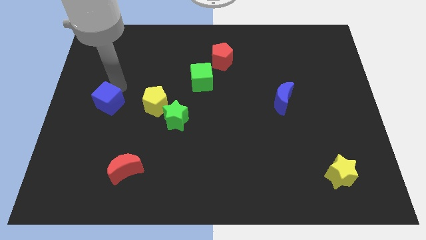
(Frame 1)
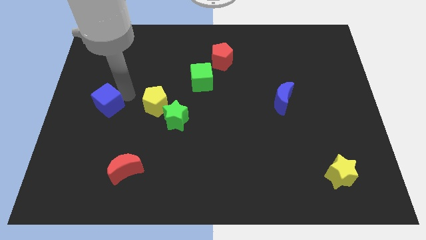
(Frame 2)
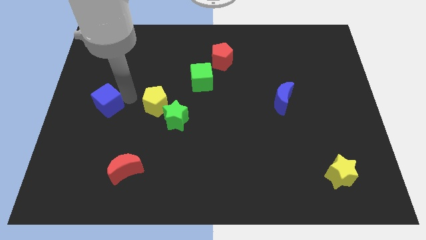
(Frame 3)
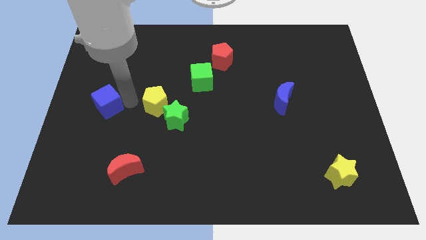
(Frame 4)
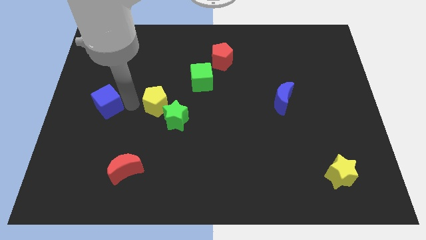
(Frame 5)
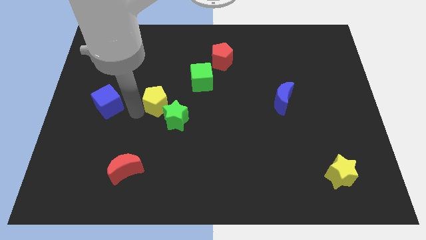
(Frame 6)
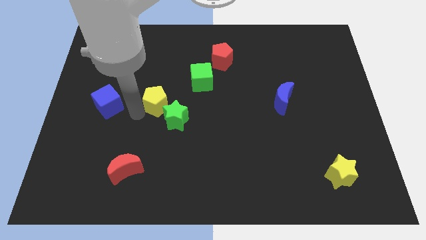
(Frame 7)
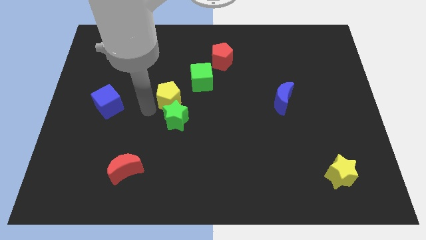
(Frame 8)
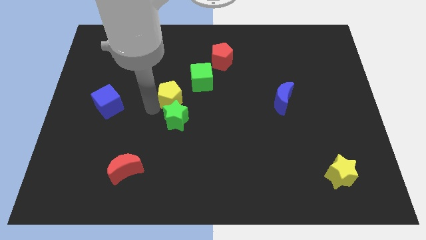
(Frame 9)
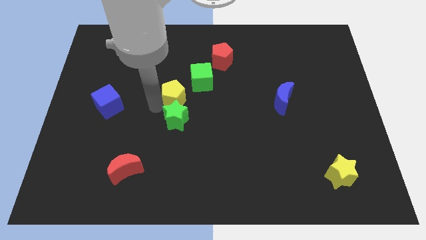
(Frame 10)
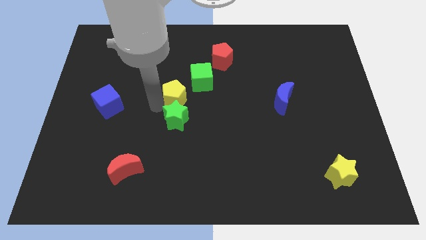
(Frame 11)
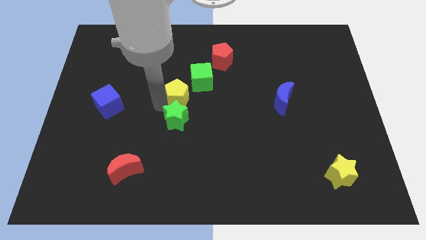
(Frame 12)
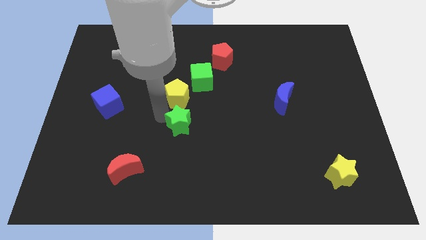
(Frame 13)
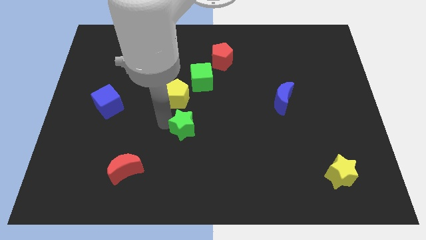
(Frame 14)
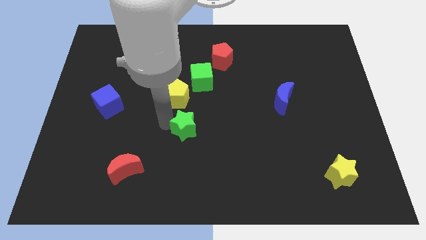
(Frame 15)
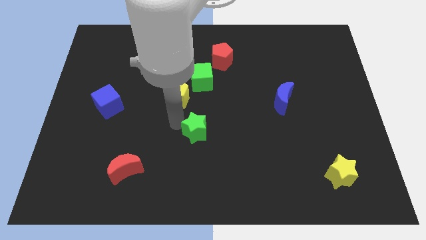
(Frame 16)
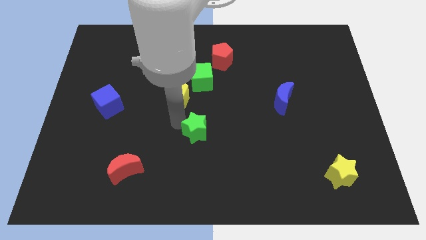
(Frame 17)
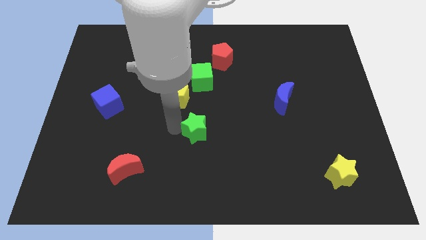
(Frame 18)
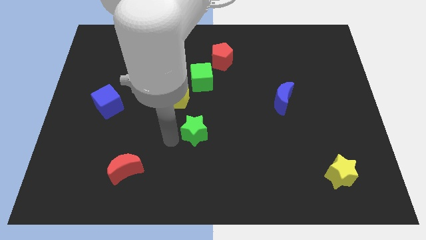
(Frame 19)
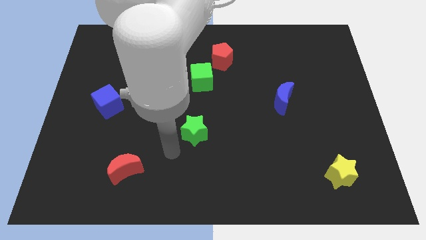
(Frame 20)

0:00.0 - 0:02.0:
place the green star diagonal to the yellow pentagon

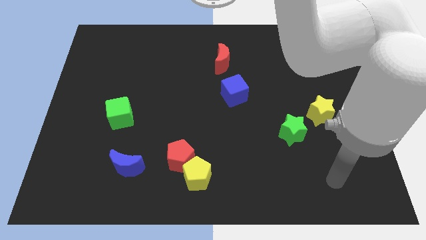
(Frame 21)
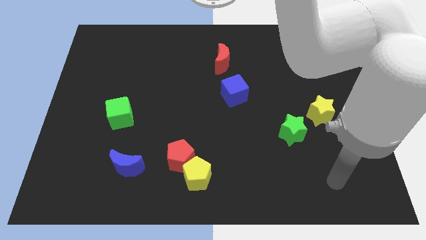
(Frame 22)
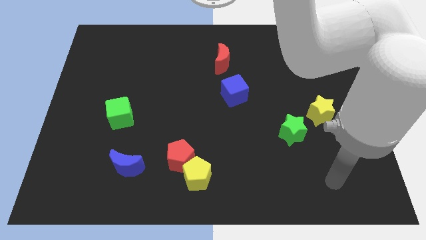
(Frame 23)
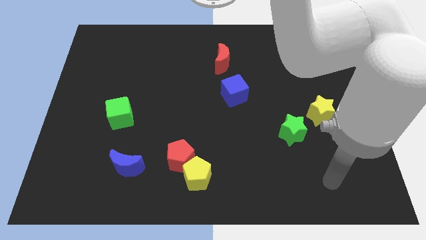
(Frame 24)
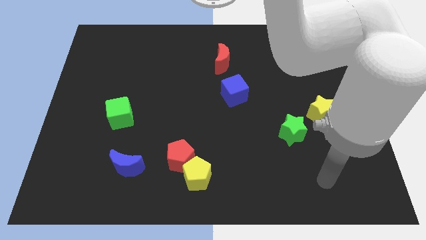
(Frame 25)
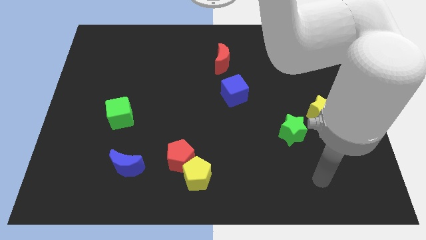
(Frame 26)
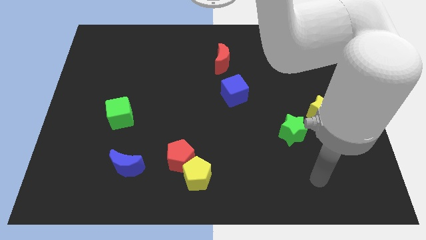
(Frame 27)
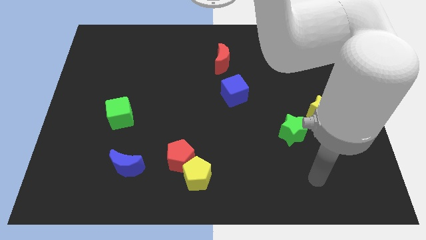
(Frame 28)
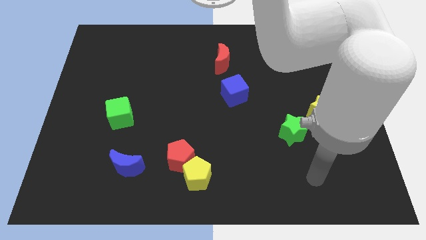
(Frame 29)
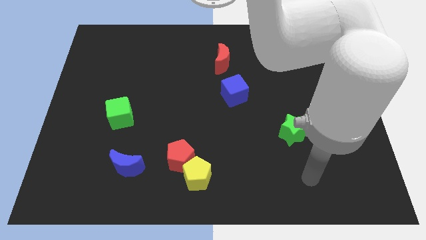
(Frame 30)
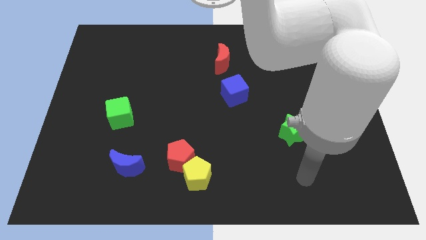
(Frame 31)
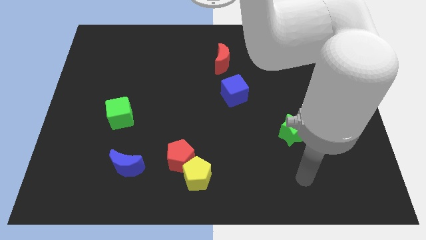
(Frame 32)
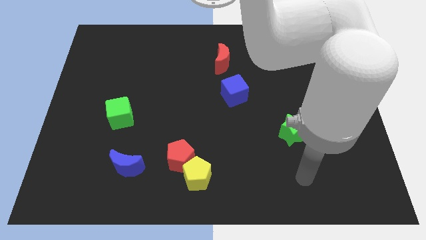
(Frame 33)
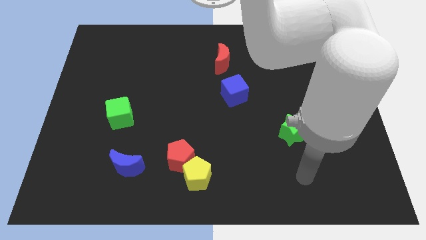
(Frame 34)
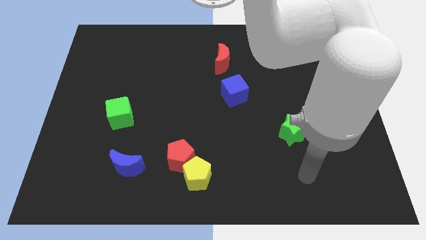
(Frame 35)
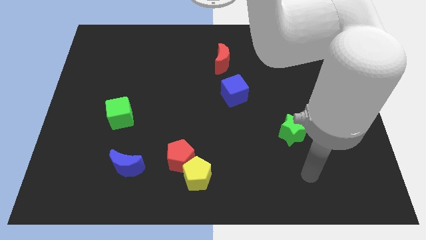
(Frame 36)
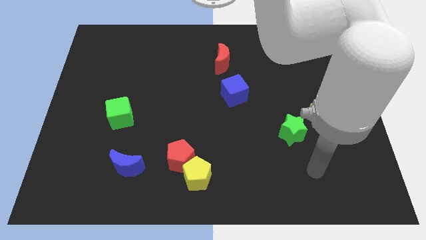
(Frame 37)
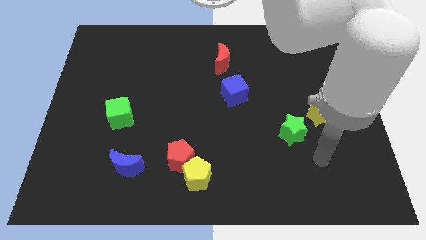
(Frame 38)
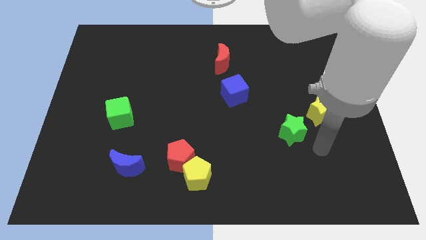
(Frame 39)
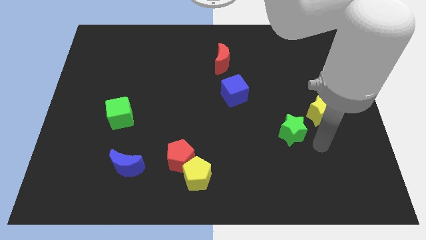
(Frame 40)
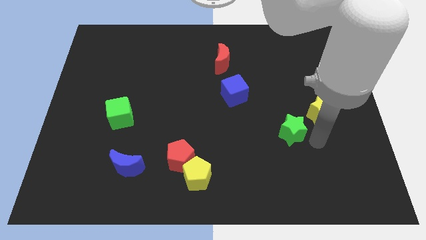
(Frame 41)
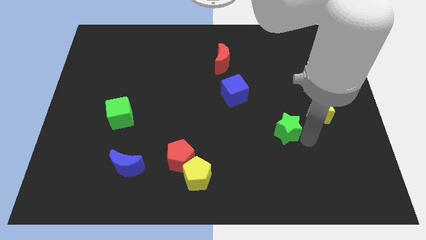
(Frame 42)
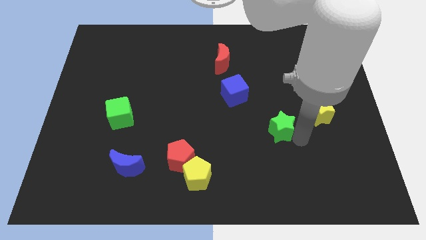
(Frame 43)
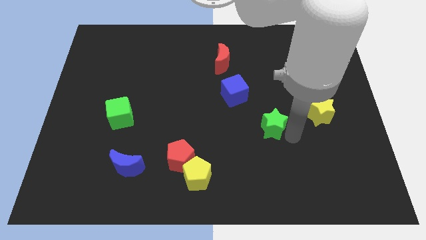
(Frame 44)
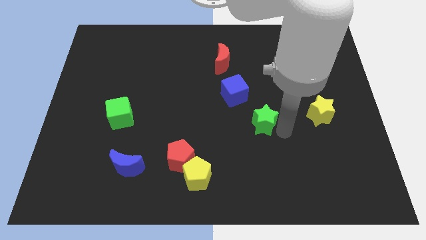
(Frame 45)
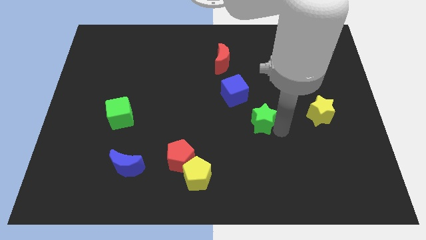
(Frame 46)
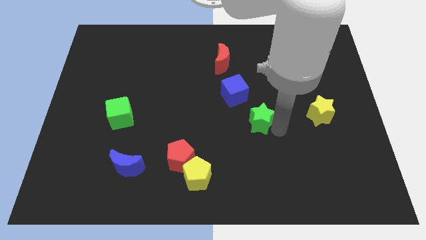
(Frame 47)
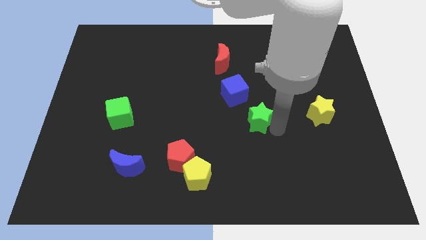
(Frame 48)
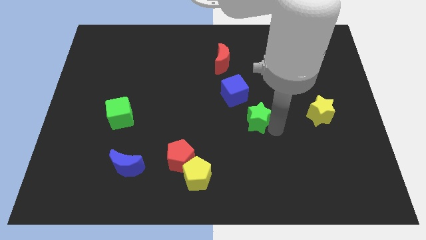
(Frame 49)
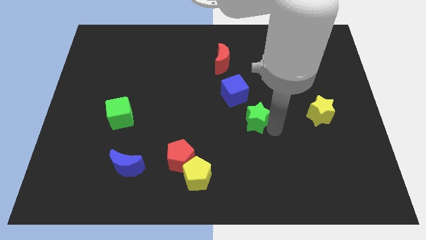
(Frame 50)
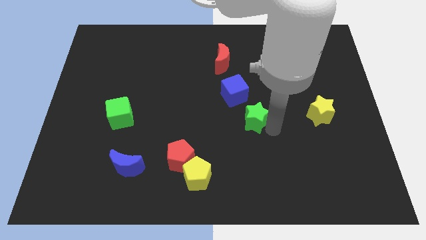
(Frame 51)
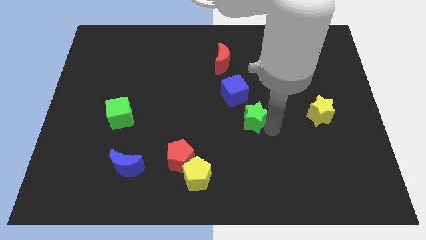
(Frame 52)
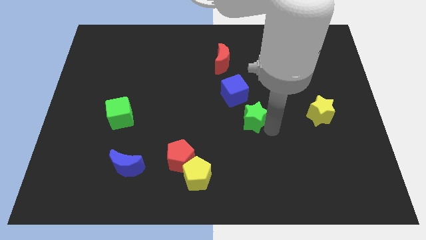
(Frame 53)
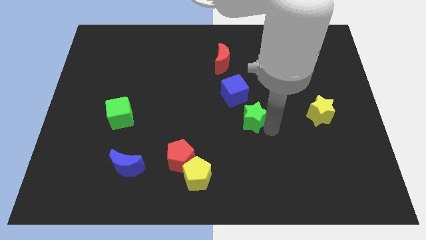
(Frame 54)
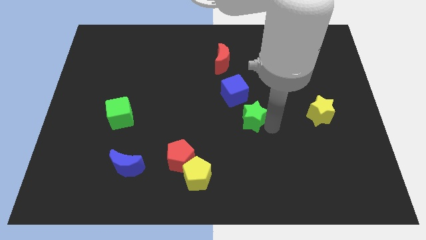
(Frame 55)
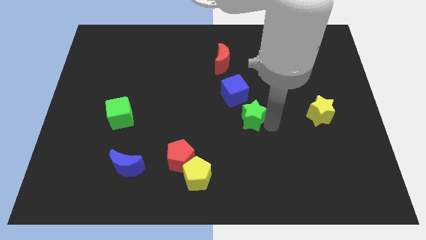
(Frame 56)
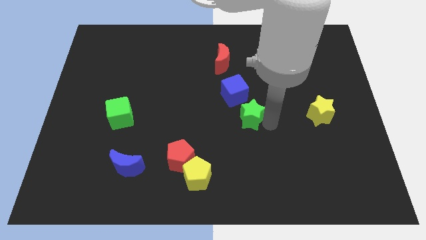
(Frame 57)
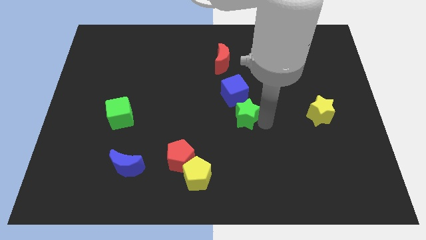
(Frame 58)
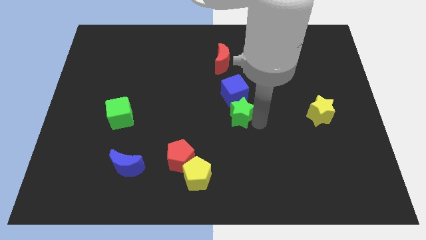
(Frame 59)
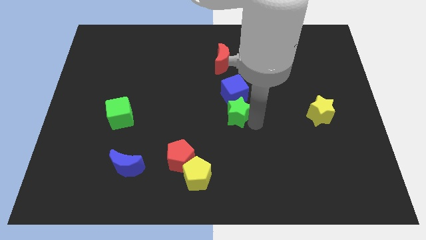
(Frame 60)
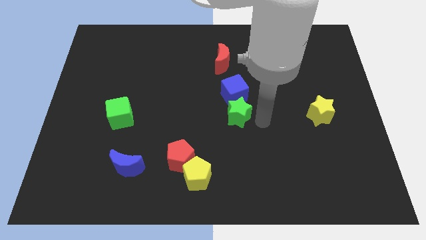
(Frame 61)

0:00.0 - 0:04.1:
move the green star to the bottom of the blue cube

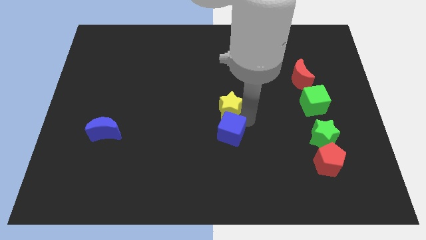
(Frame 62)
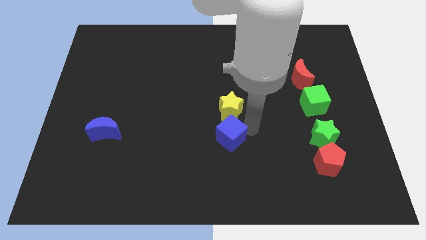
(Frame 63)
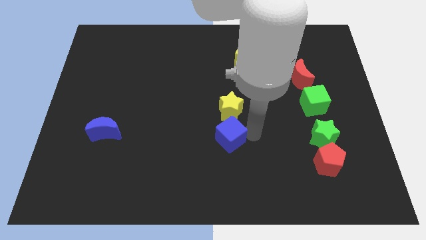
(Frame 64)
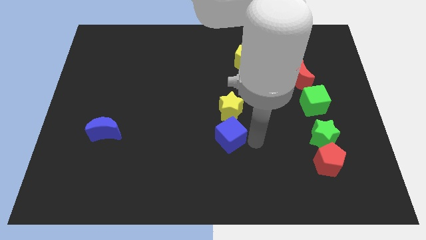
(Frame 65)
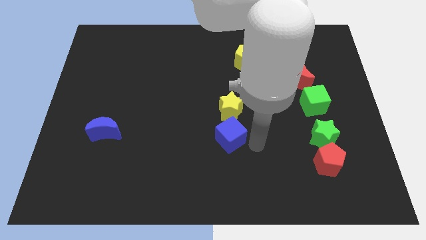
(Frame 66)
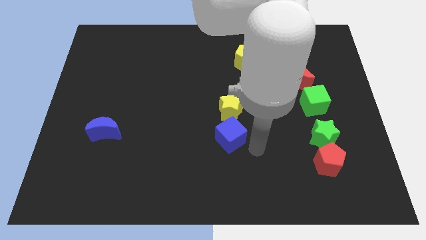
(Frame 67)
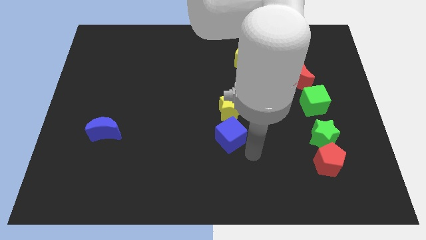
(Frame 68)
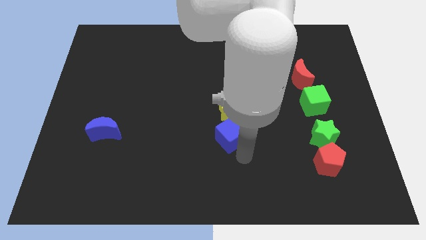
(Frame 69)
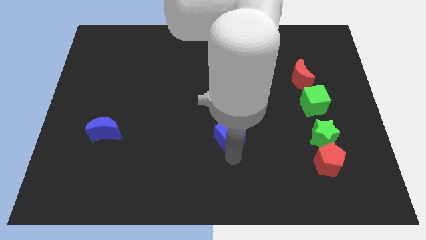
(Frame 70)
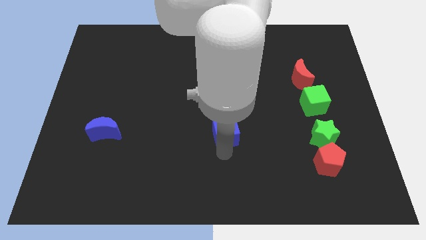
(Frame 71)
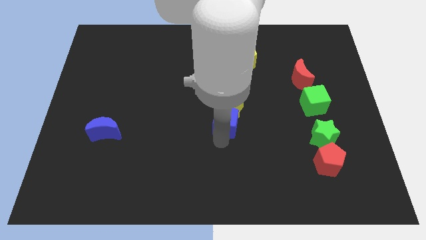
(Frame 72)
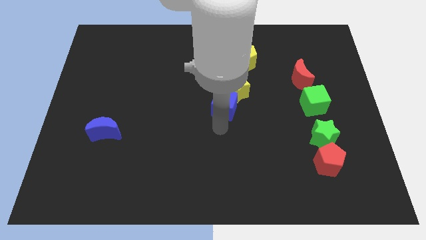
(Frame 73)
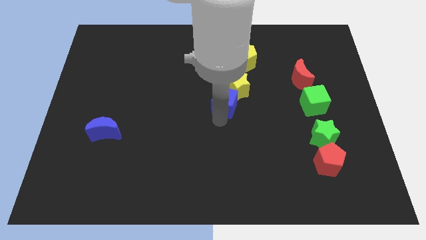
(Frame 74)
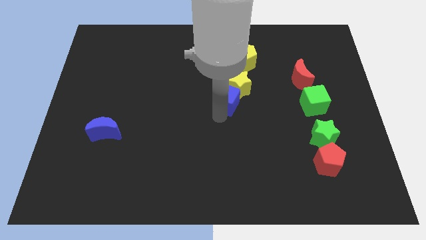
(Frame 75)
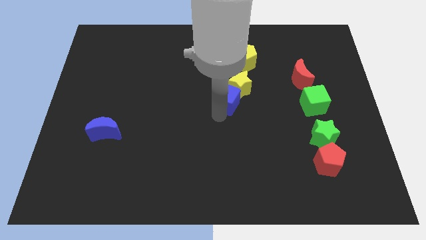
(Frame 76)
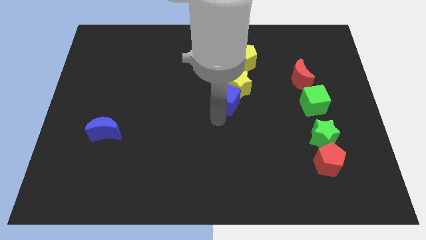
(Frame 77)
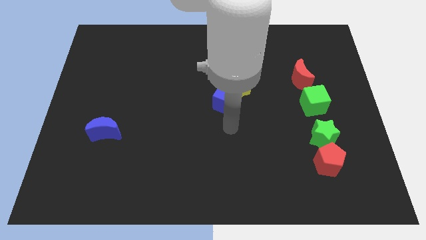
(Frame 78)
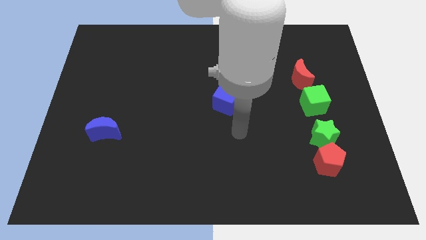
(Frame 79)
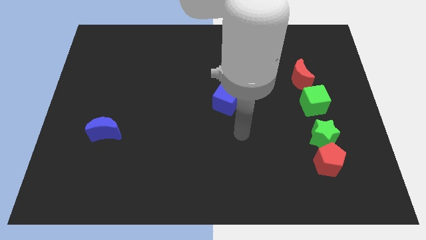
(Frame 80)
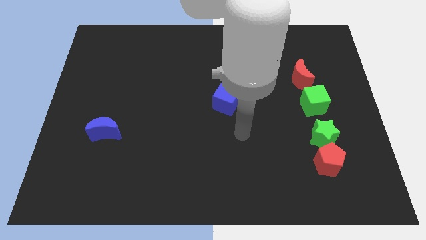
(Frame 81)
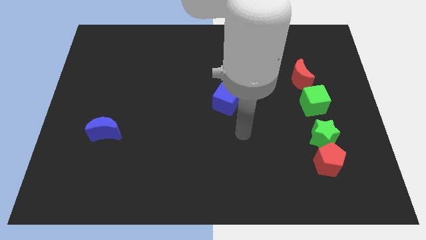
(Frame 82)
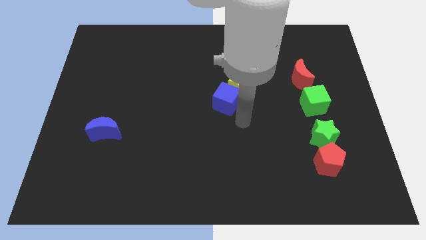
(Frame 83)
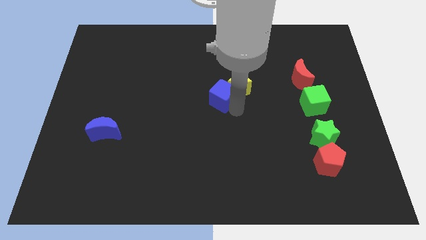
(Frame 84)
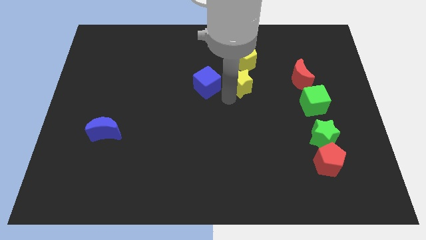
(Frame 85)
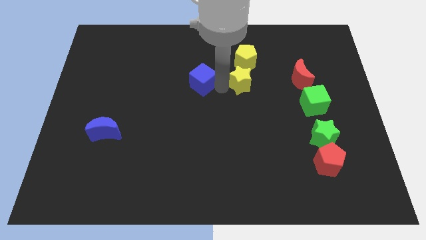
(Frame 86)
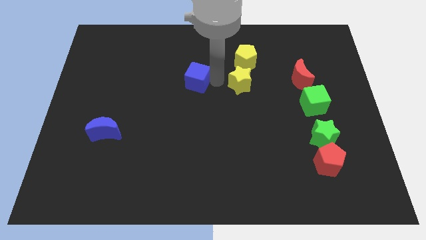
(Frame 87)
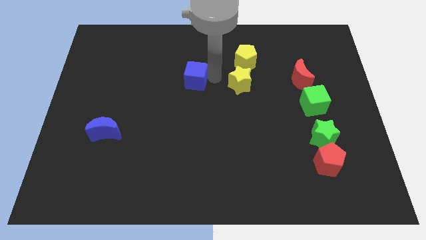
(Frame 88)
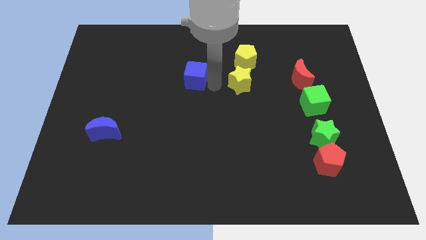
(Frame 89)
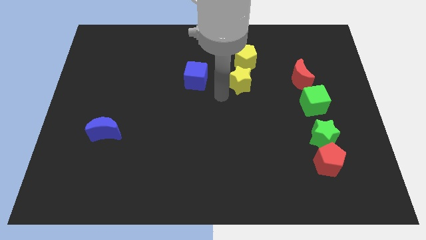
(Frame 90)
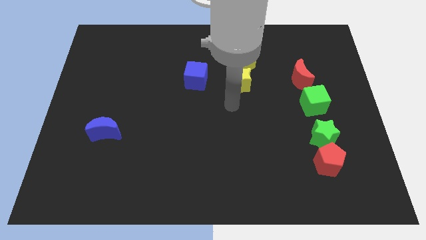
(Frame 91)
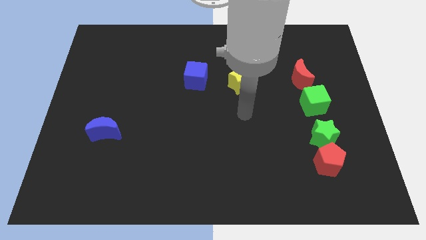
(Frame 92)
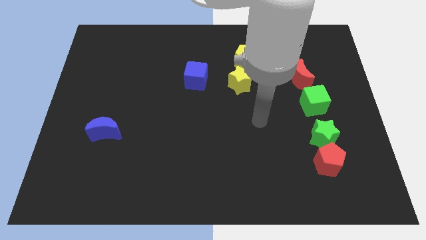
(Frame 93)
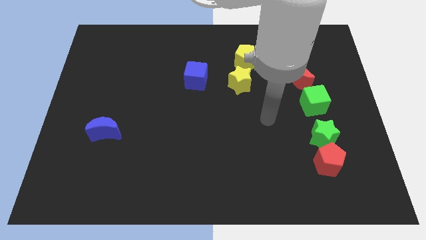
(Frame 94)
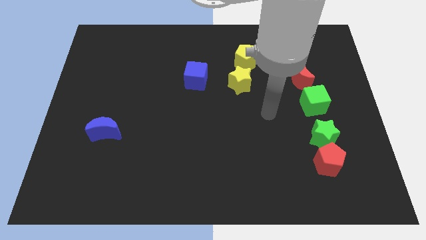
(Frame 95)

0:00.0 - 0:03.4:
place the blue cube to the left of the yellow star
